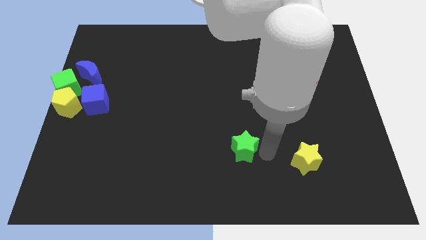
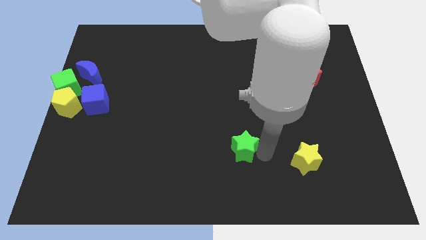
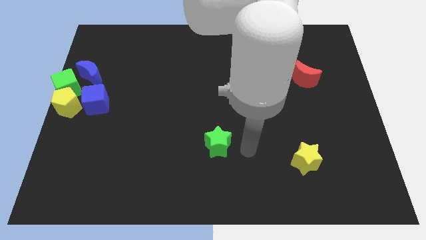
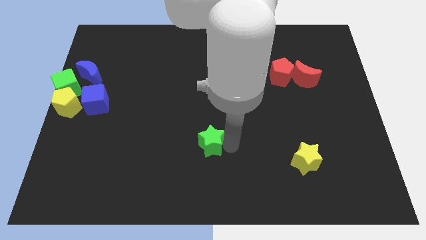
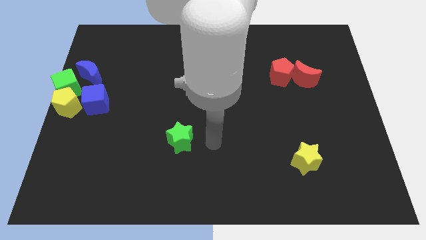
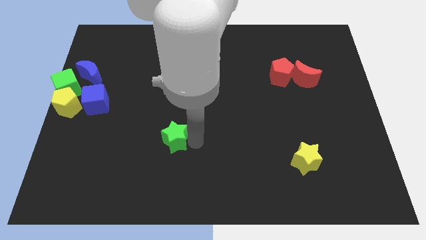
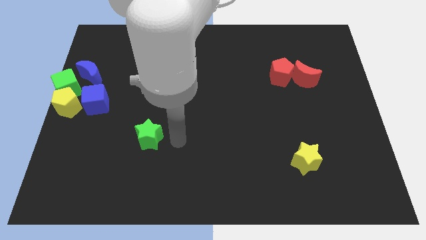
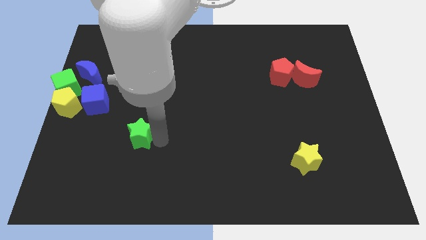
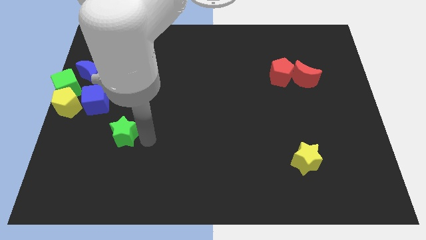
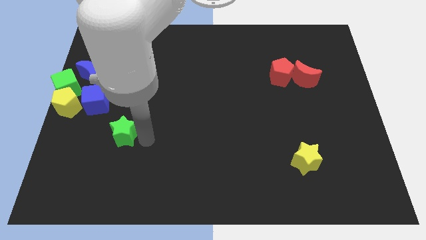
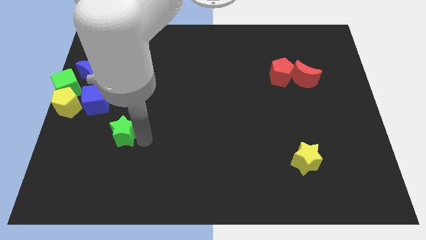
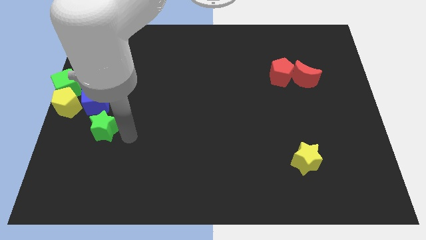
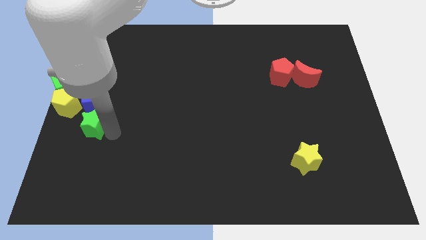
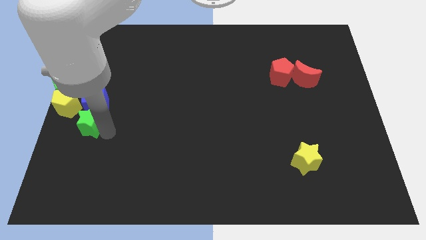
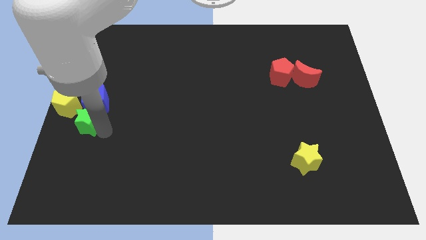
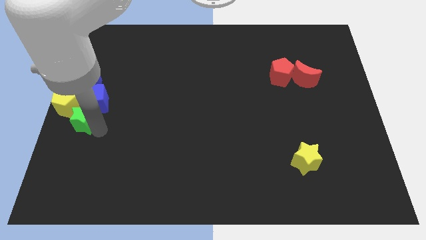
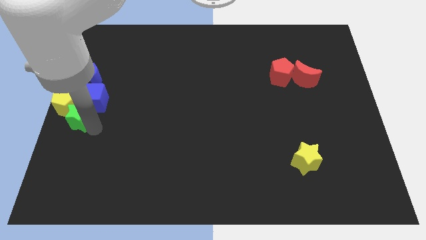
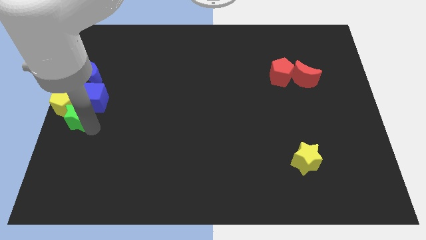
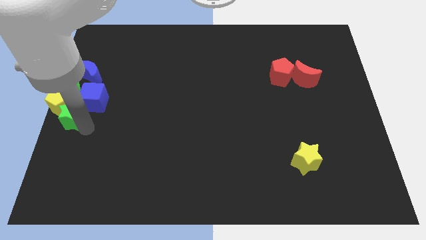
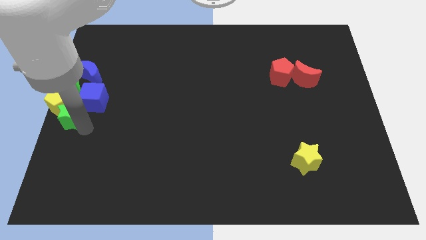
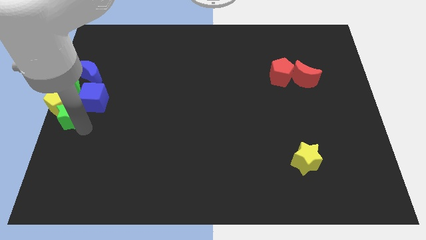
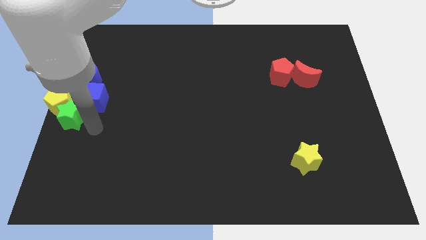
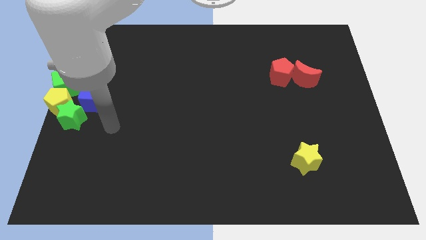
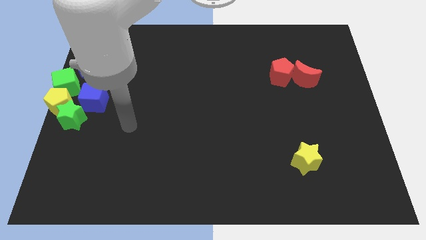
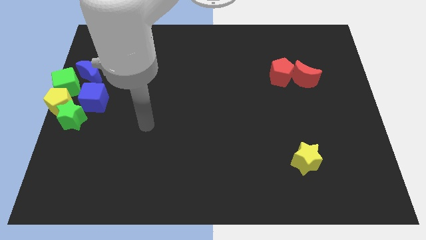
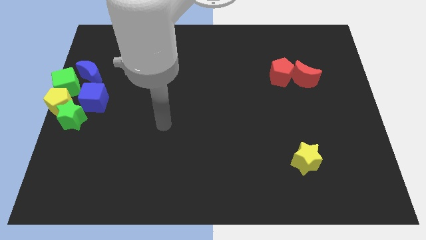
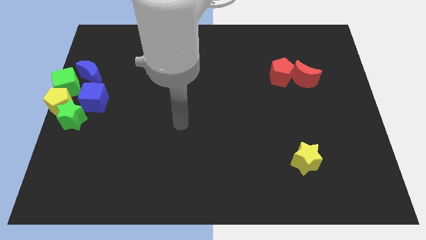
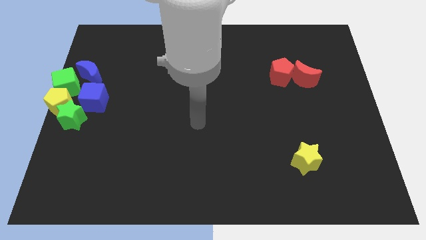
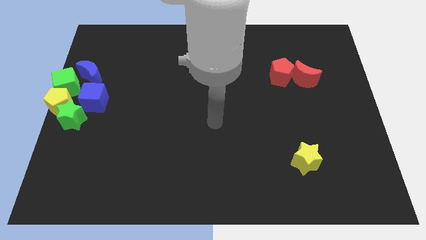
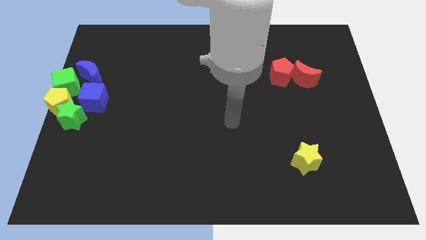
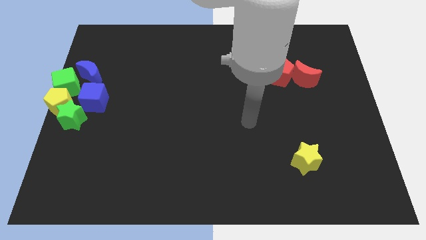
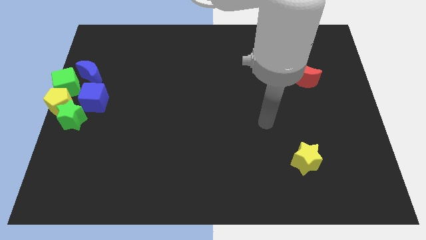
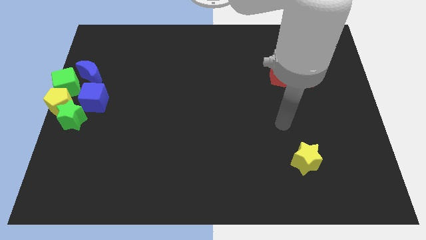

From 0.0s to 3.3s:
put the green star diagonally to the yellow pentagon

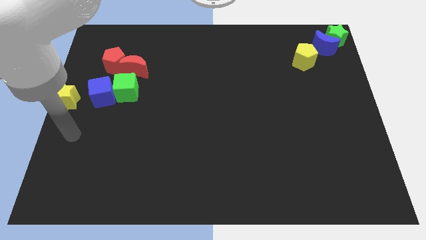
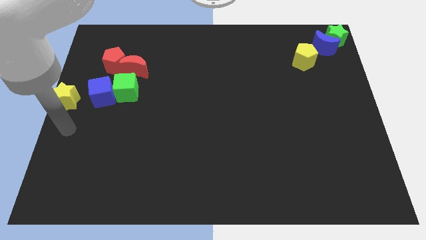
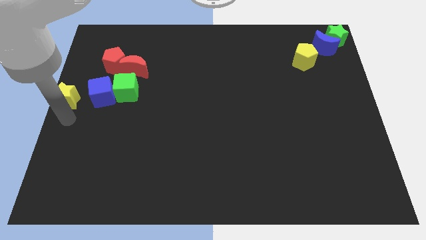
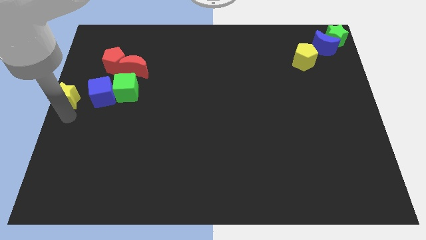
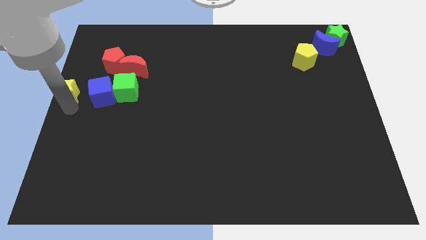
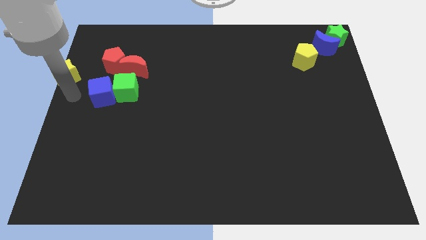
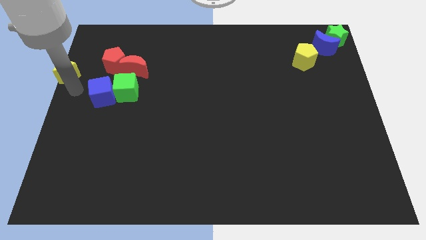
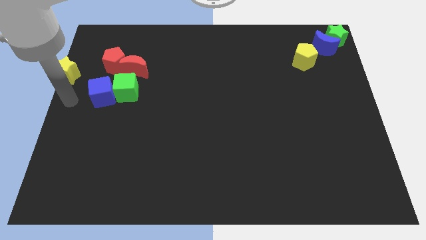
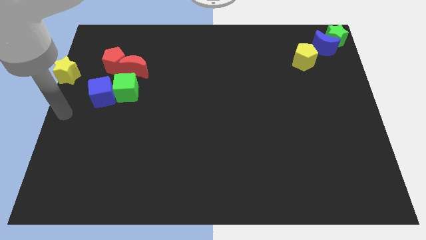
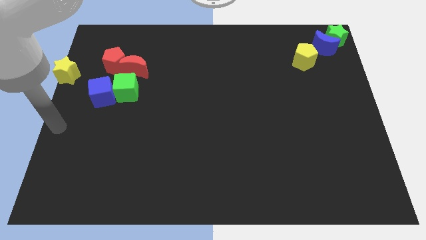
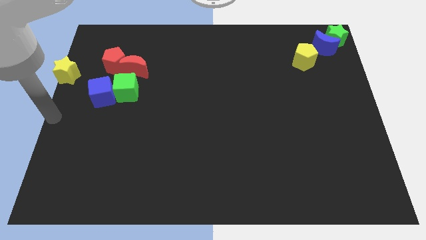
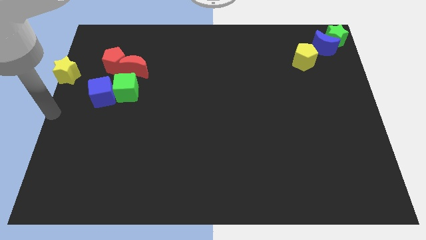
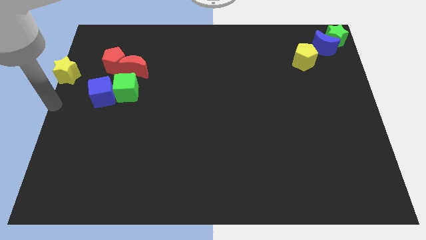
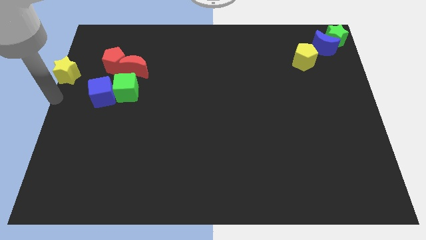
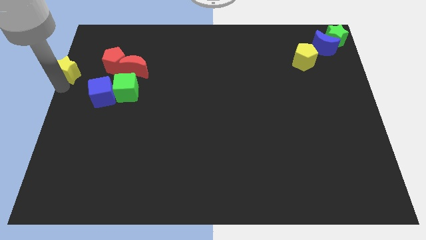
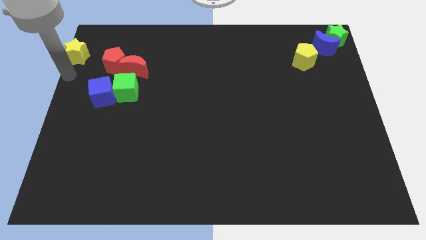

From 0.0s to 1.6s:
place the yellow star left to the red pentagon

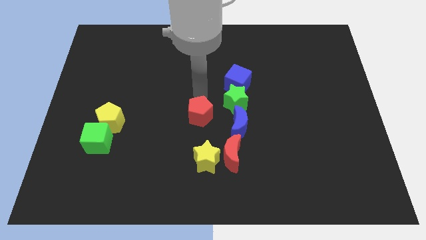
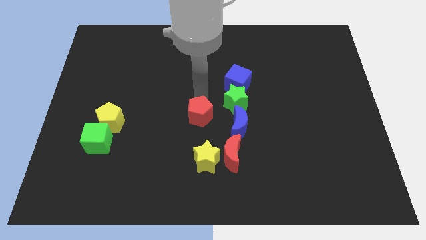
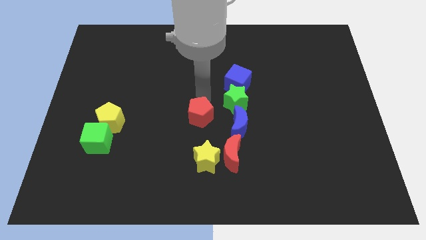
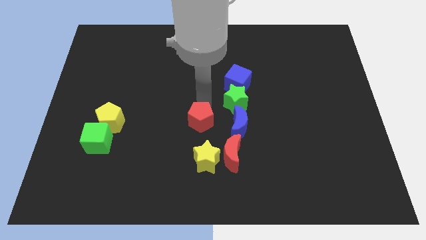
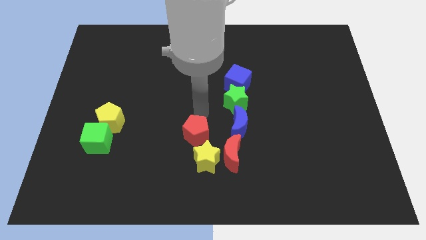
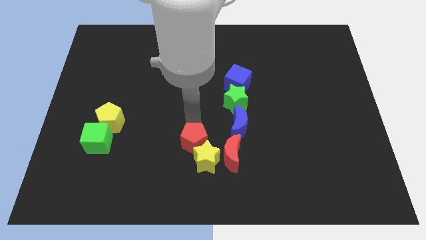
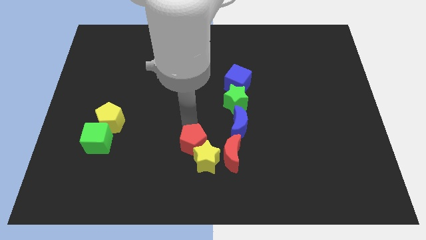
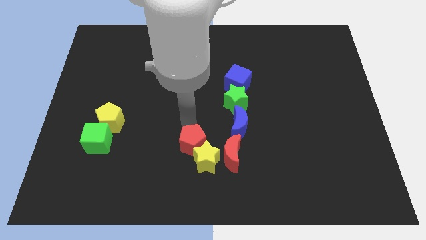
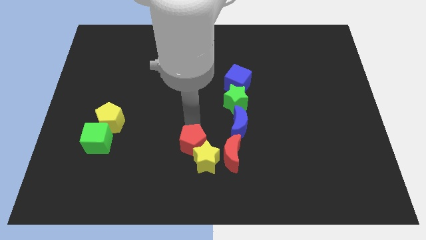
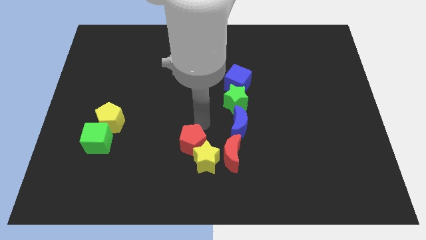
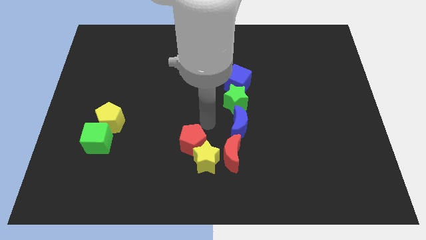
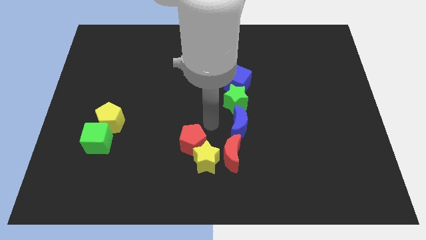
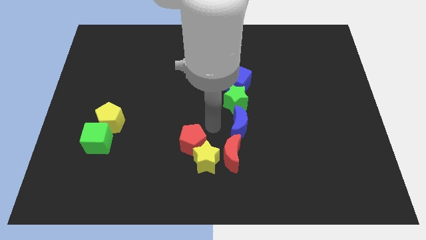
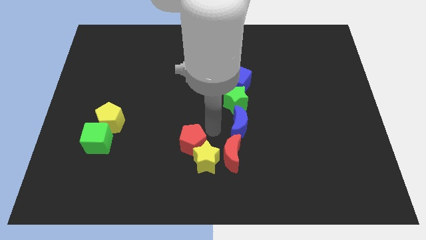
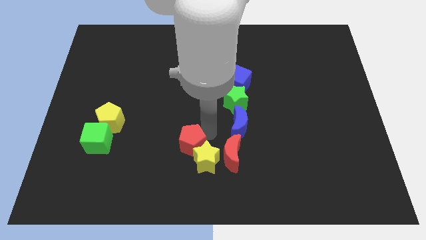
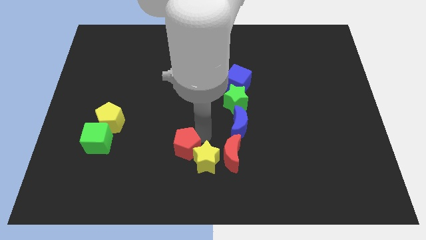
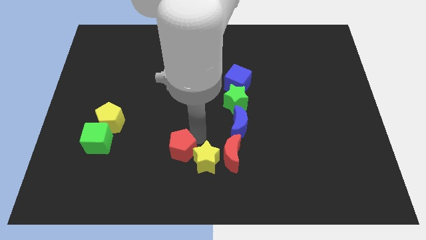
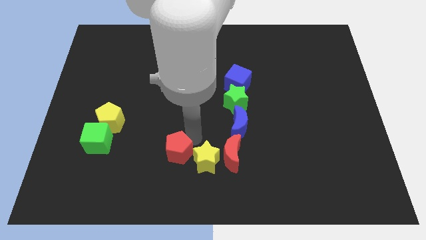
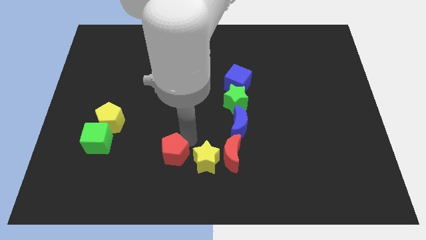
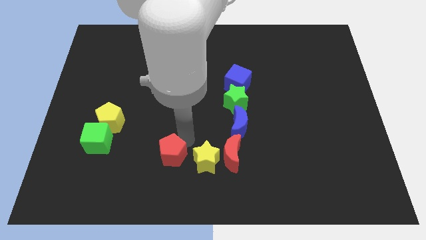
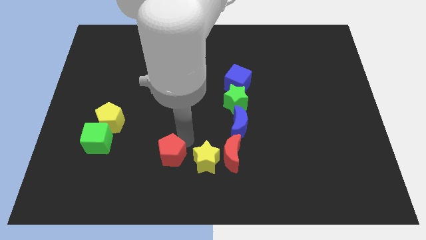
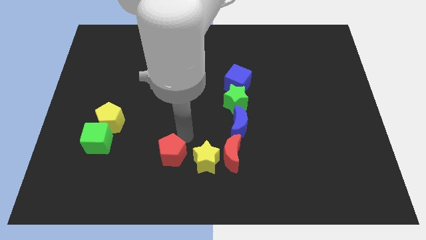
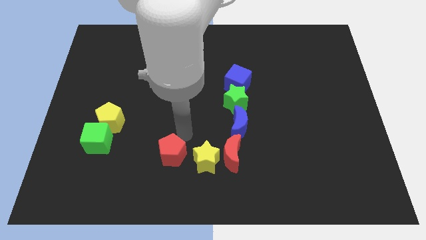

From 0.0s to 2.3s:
place red pentagon left to yellow star

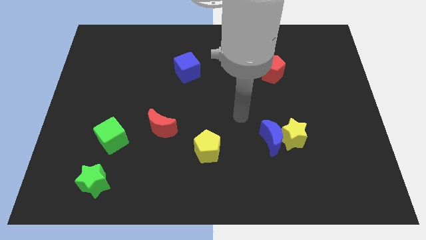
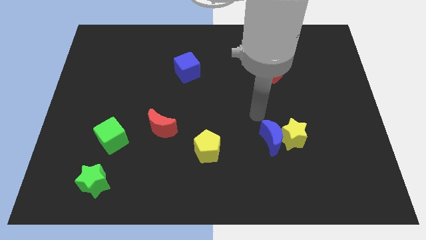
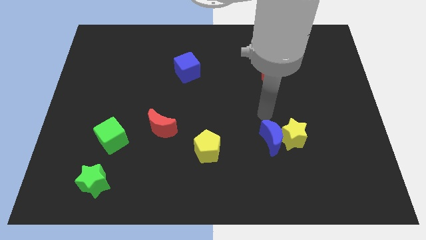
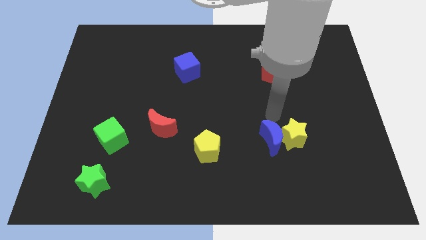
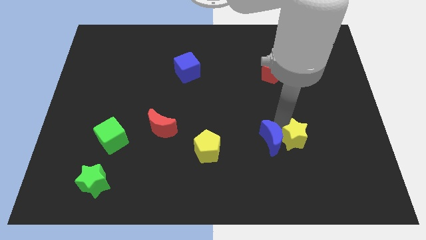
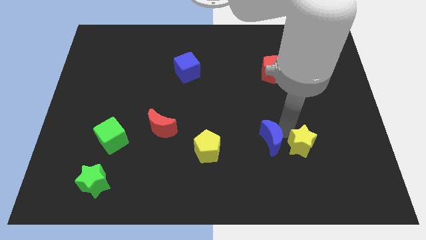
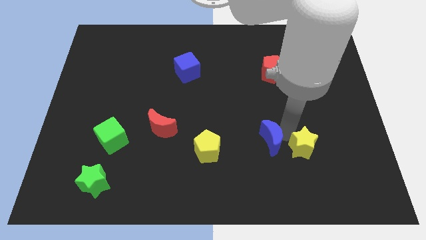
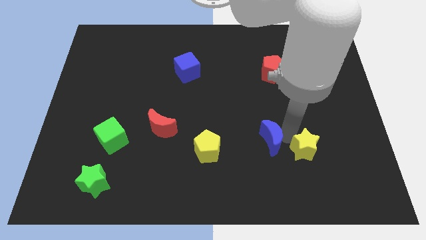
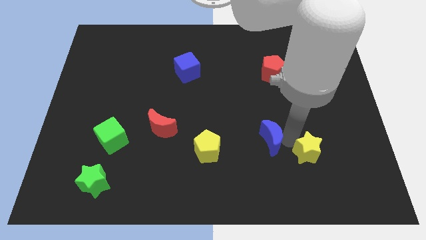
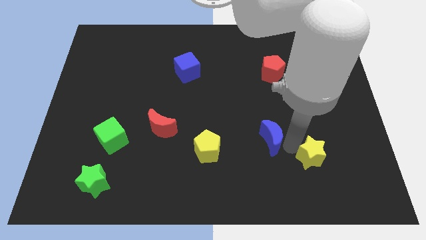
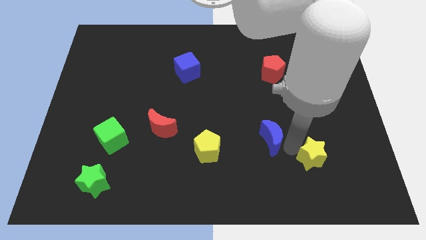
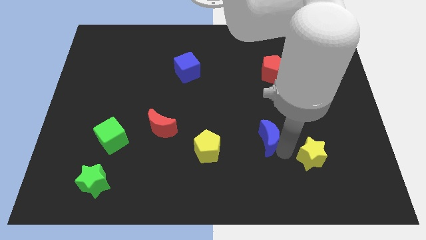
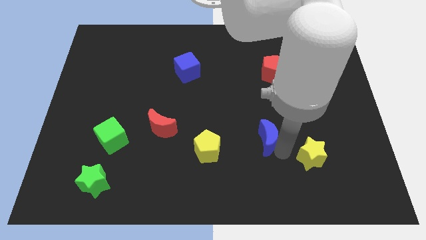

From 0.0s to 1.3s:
move yellow star slightly down

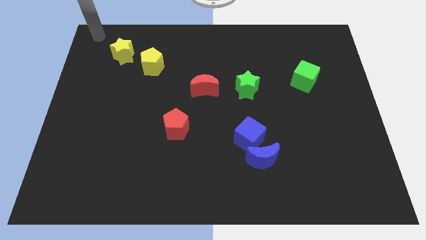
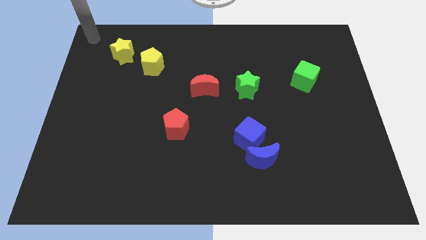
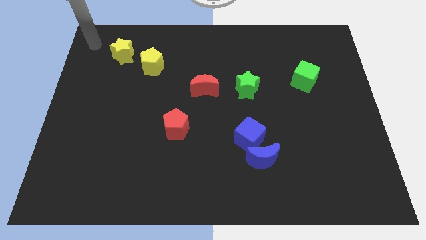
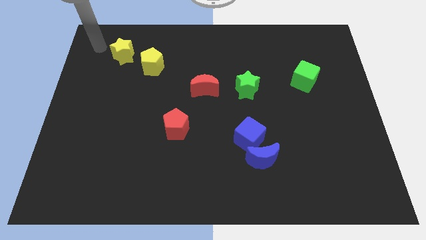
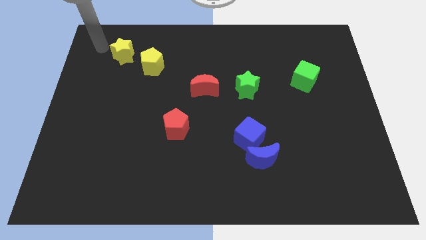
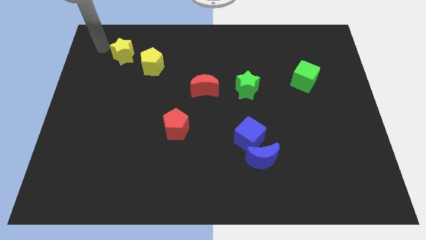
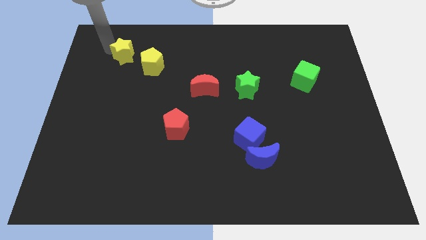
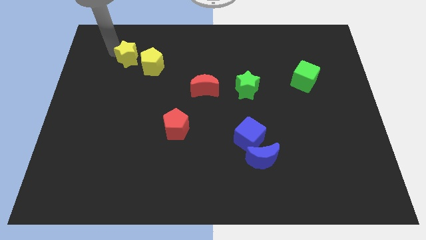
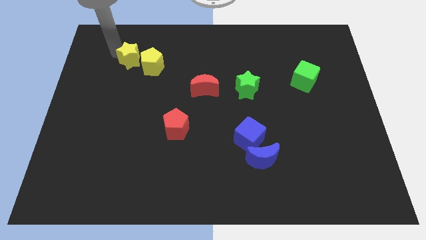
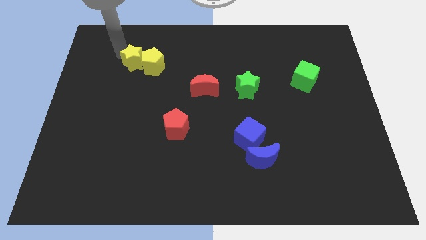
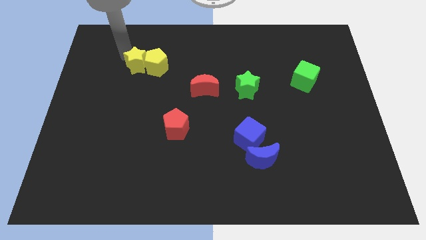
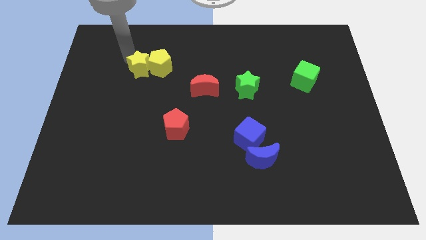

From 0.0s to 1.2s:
move the yellow star into the yellow pentagon
